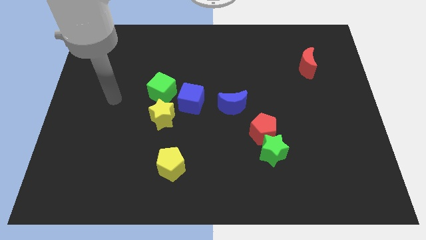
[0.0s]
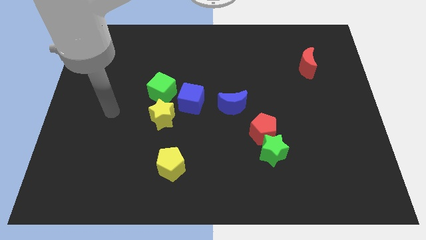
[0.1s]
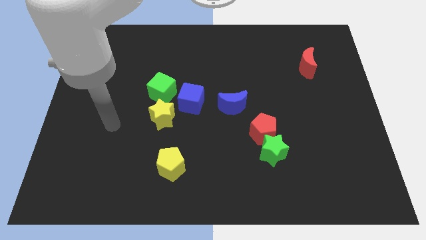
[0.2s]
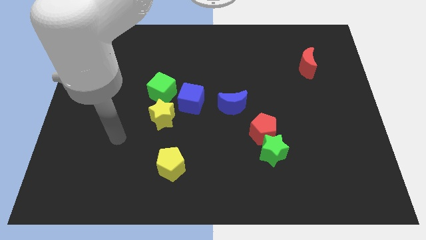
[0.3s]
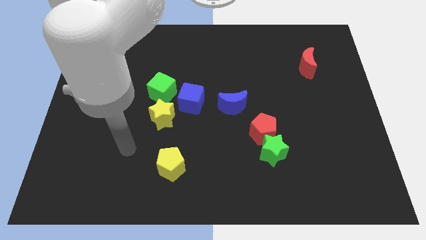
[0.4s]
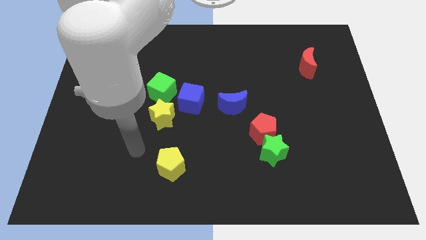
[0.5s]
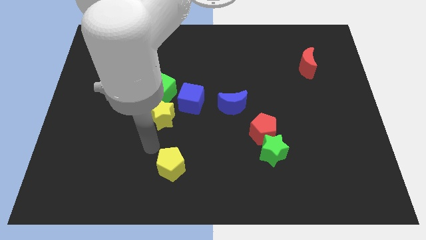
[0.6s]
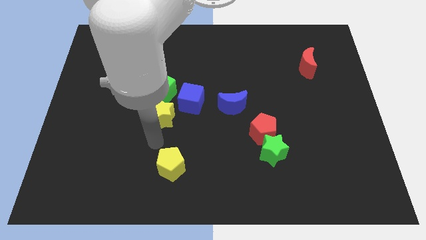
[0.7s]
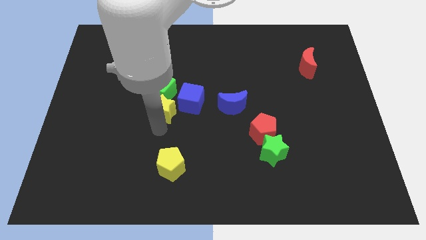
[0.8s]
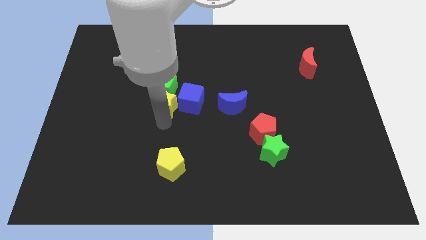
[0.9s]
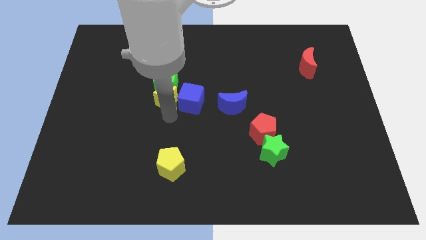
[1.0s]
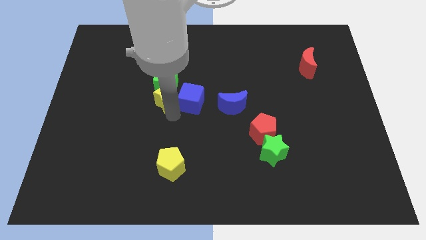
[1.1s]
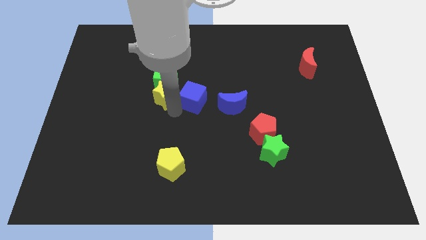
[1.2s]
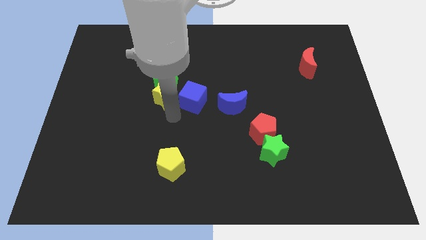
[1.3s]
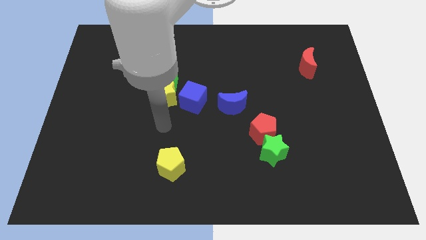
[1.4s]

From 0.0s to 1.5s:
place the yellow star into the green cube and blue cube

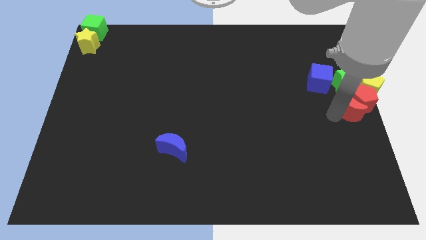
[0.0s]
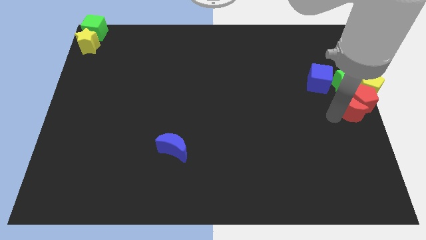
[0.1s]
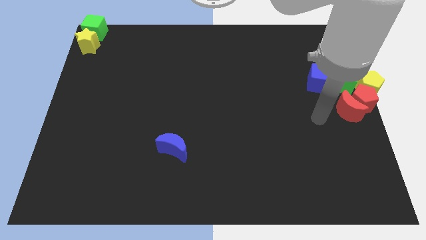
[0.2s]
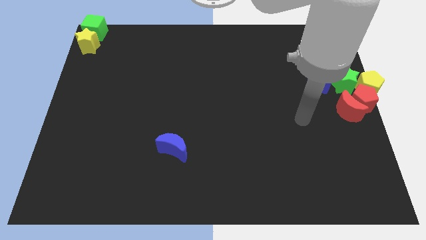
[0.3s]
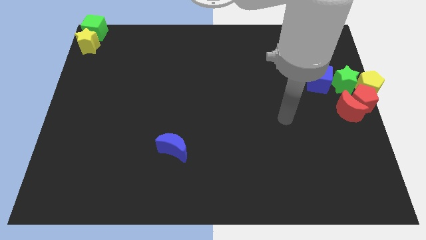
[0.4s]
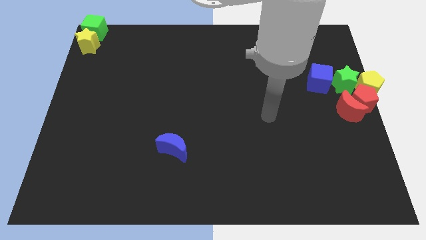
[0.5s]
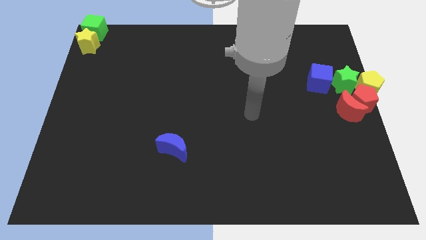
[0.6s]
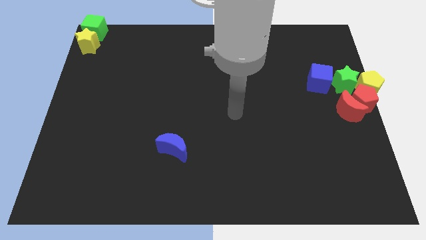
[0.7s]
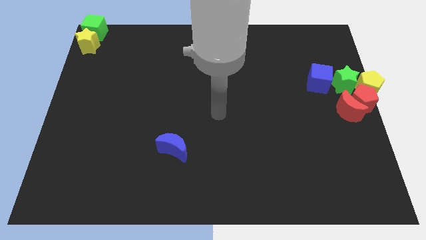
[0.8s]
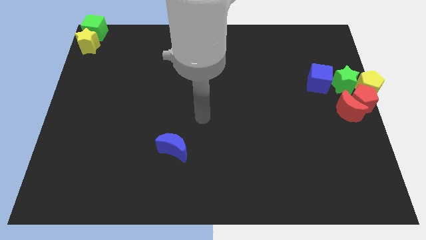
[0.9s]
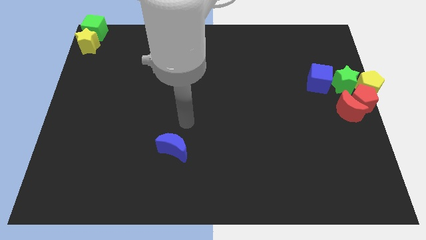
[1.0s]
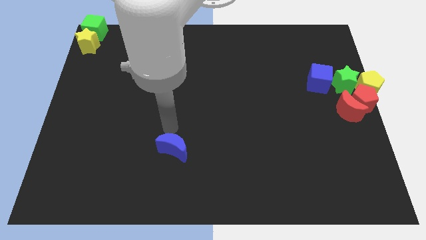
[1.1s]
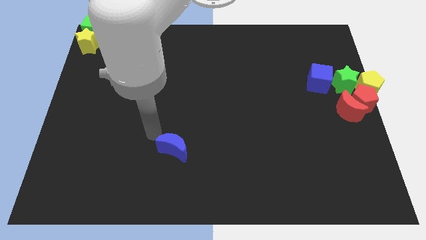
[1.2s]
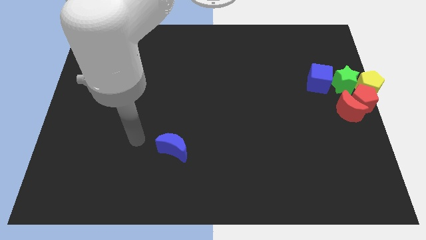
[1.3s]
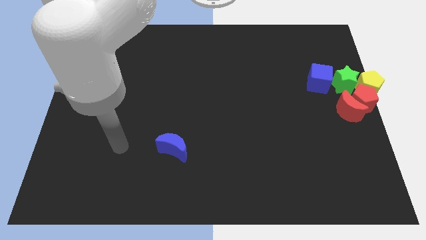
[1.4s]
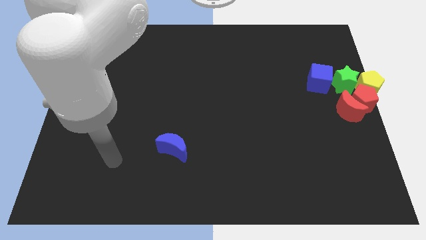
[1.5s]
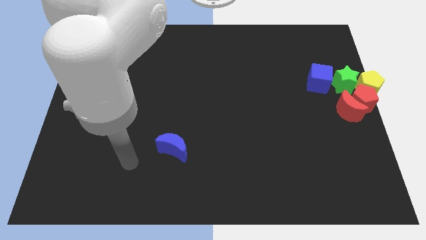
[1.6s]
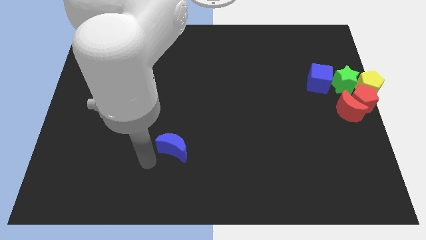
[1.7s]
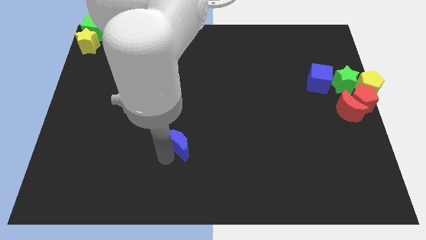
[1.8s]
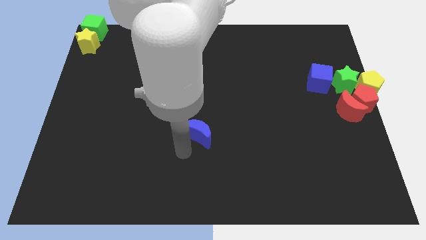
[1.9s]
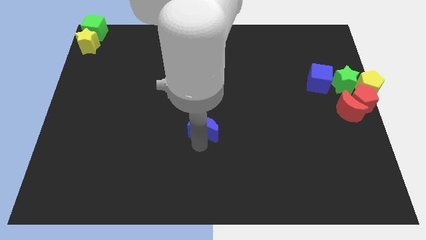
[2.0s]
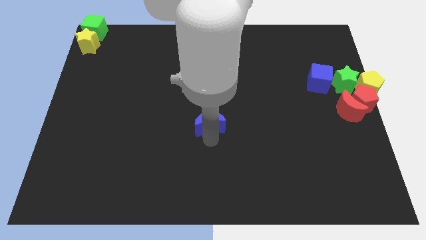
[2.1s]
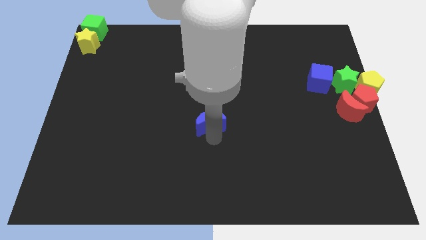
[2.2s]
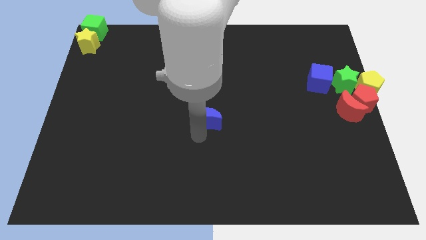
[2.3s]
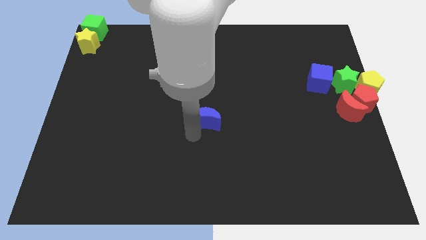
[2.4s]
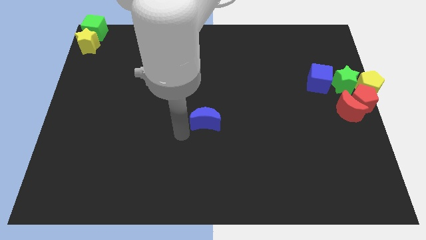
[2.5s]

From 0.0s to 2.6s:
push the blue moon towards the center of the board

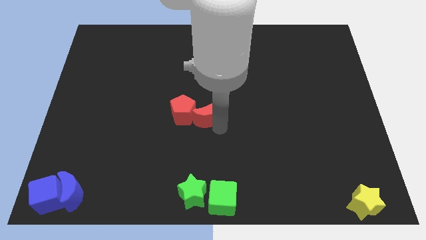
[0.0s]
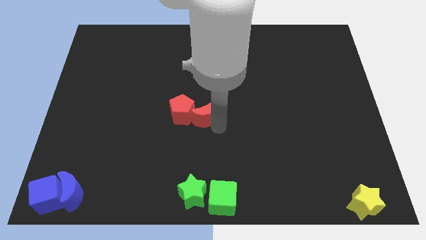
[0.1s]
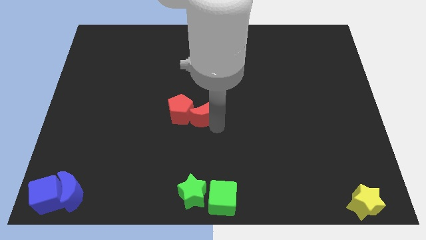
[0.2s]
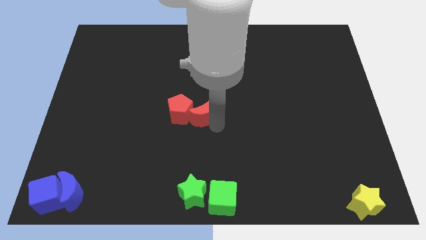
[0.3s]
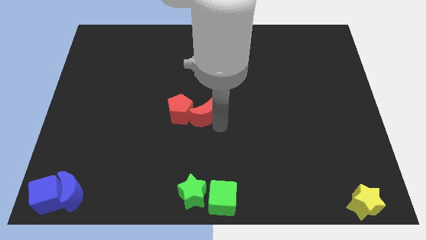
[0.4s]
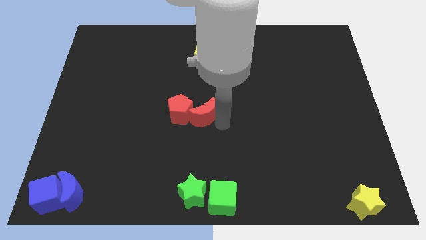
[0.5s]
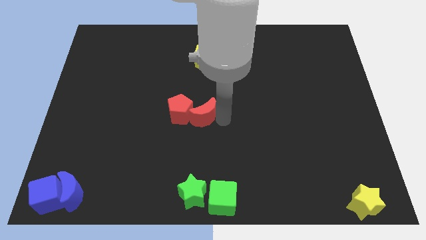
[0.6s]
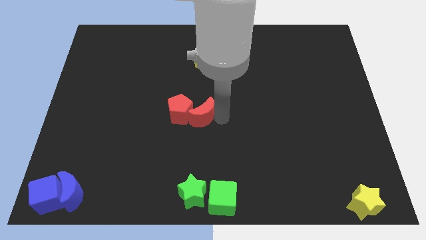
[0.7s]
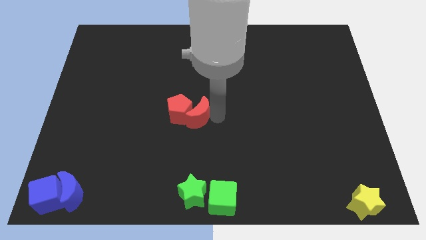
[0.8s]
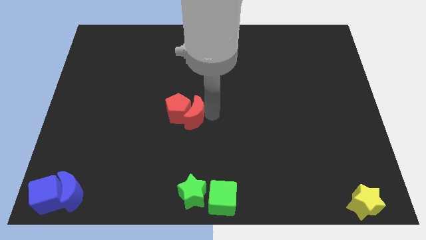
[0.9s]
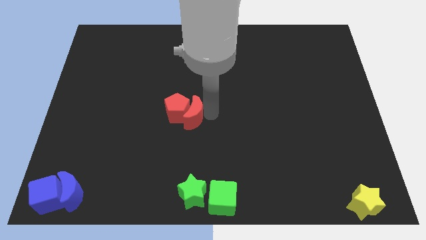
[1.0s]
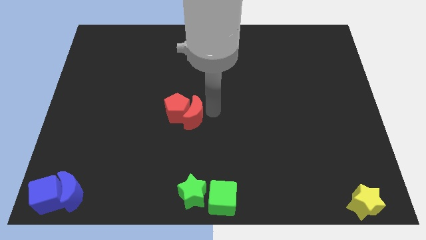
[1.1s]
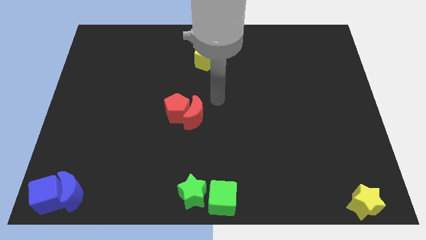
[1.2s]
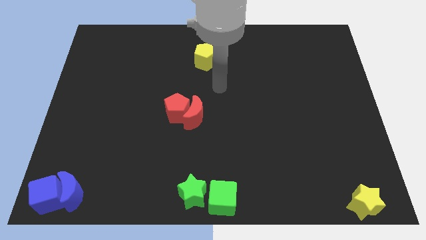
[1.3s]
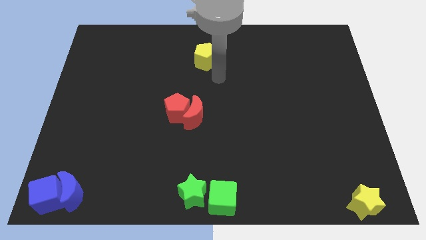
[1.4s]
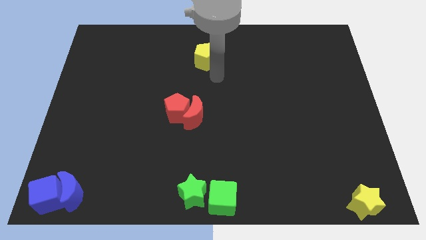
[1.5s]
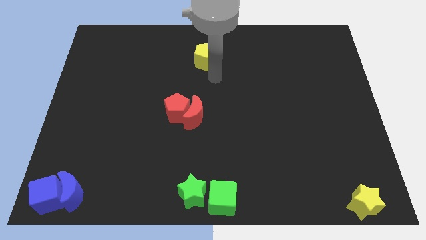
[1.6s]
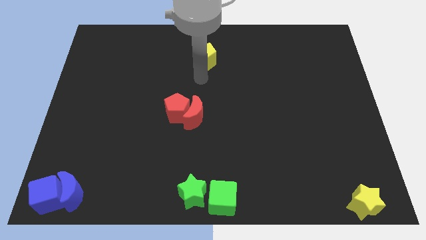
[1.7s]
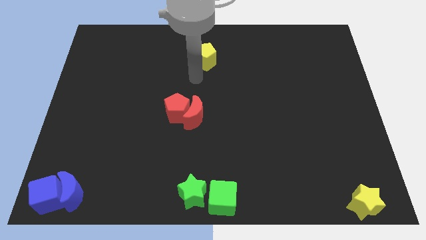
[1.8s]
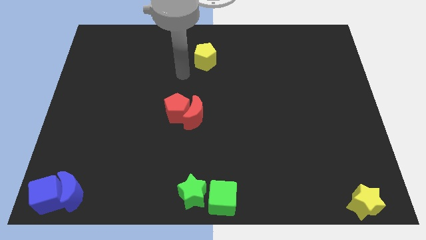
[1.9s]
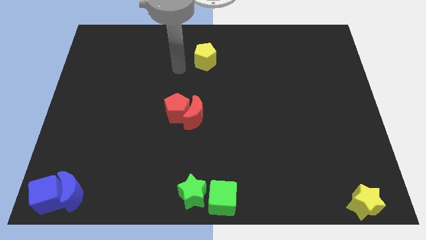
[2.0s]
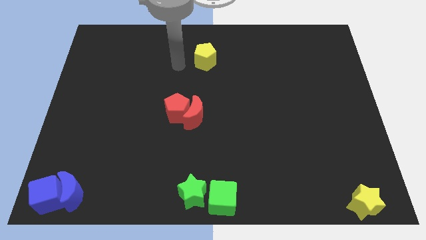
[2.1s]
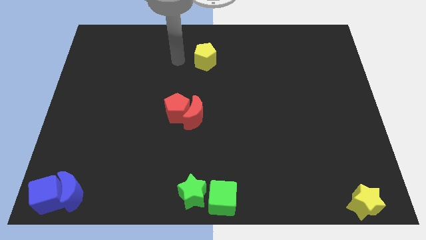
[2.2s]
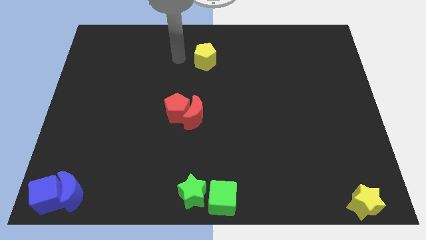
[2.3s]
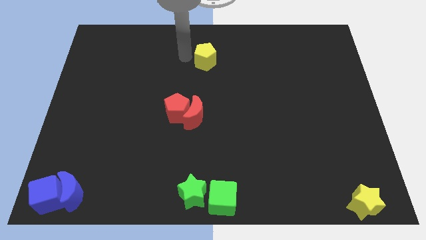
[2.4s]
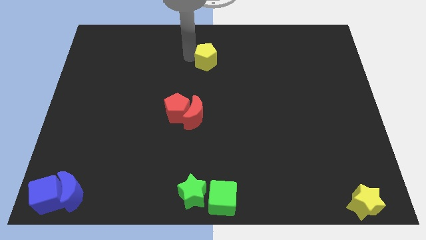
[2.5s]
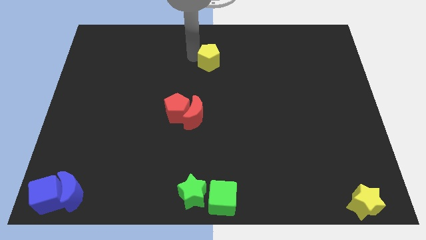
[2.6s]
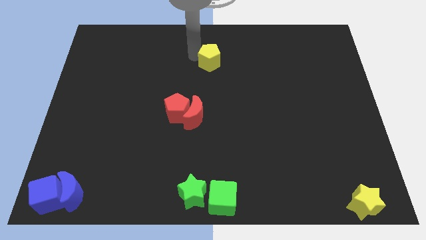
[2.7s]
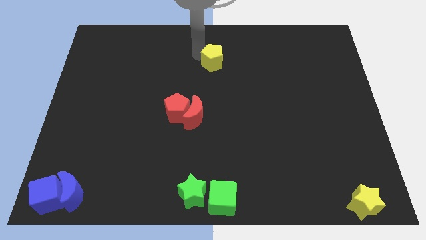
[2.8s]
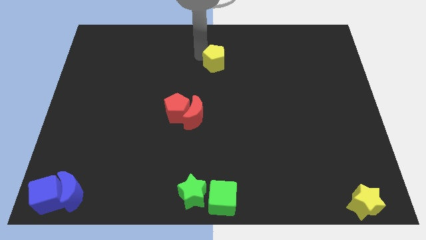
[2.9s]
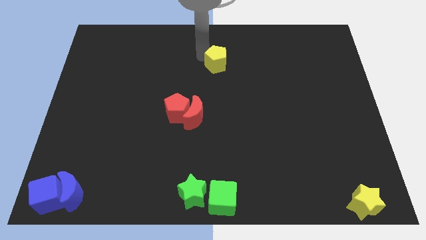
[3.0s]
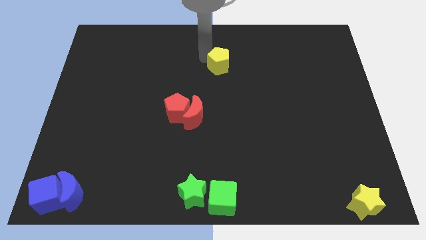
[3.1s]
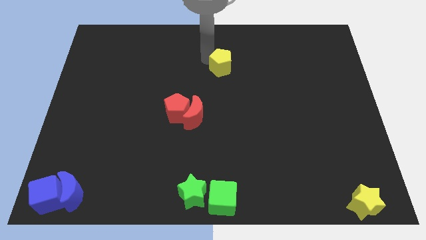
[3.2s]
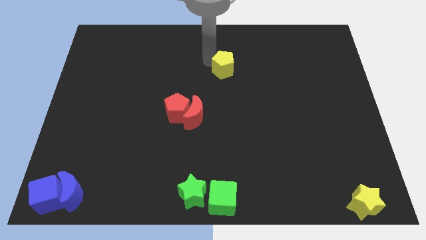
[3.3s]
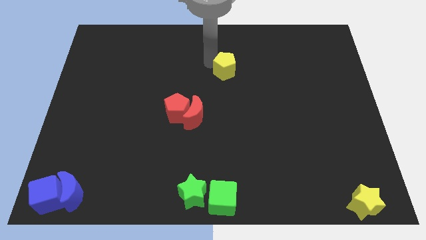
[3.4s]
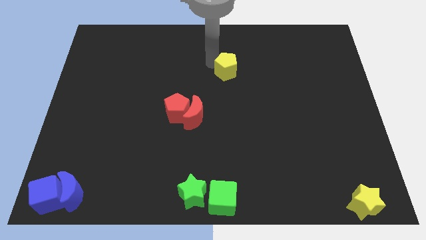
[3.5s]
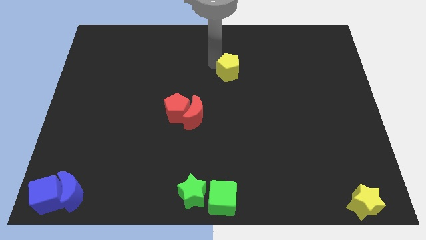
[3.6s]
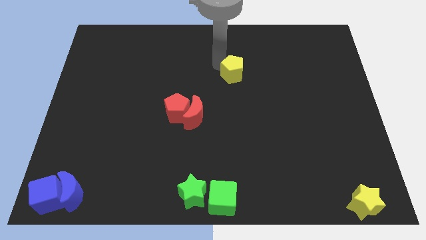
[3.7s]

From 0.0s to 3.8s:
push yellow pentagon above green cube

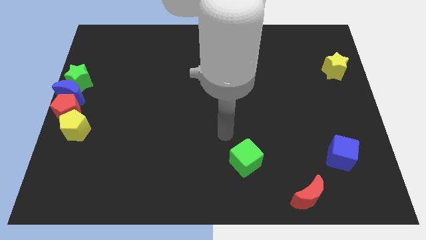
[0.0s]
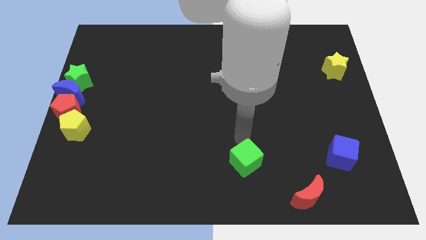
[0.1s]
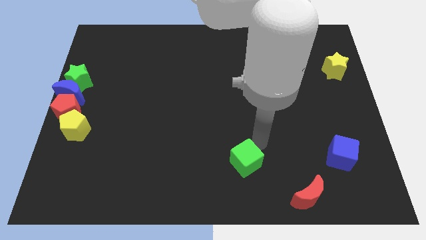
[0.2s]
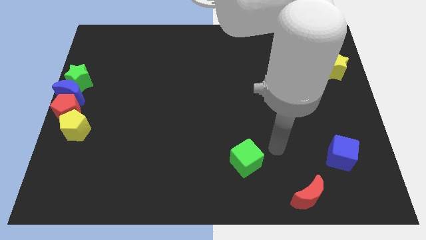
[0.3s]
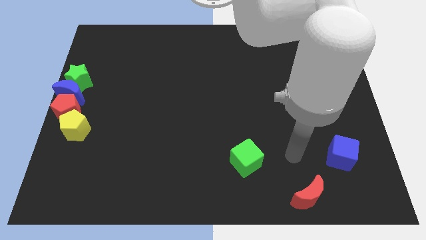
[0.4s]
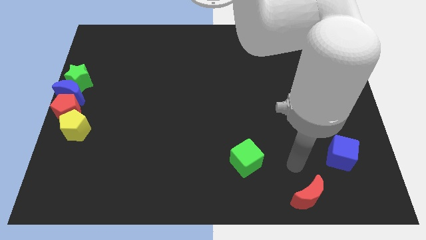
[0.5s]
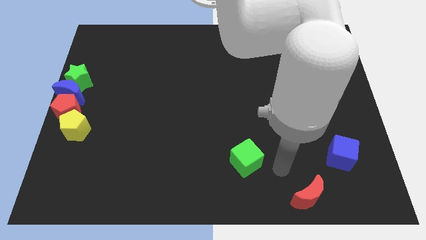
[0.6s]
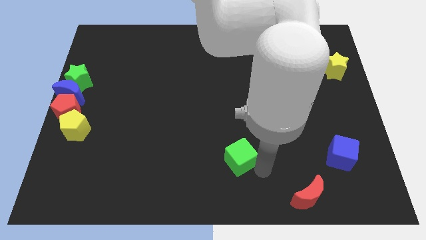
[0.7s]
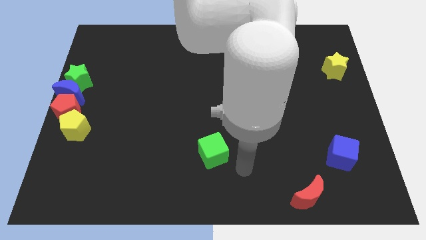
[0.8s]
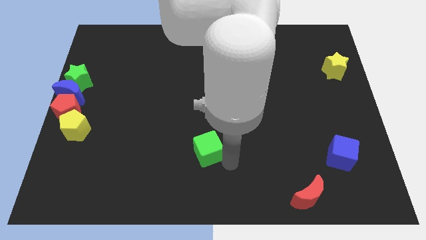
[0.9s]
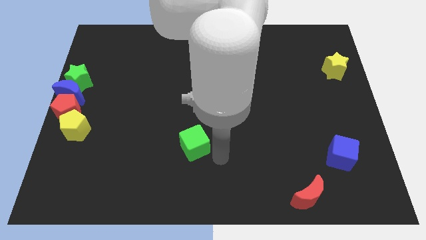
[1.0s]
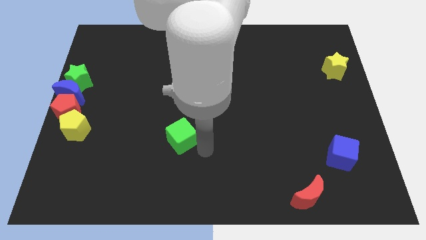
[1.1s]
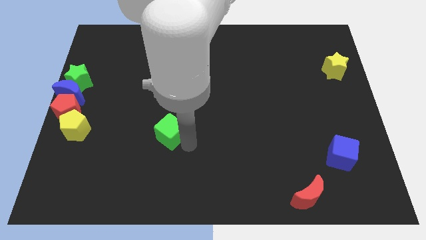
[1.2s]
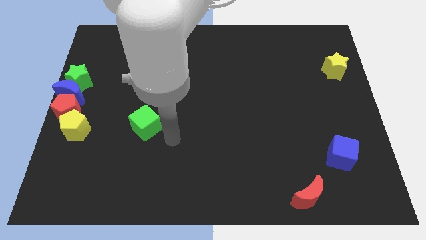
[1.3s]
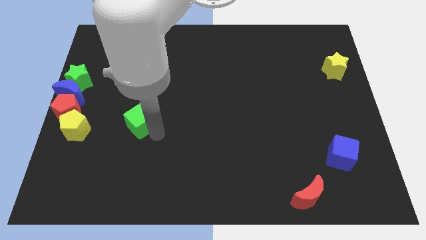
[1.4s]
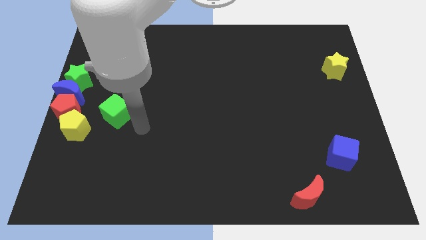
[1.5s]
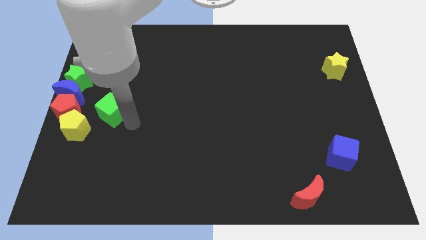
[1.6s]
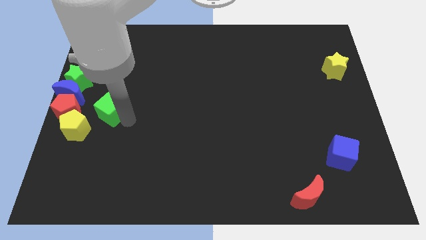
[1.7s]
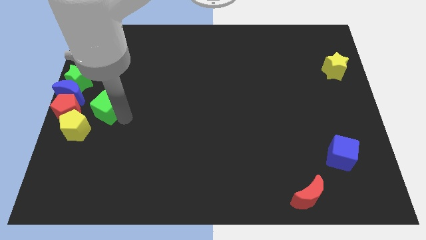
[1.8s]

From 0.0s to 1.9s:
drag the green cube towards group of blocks
